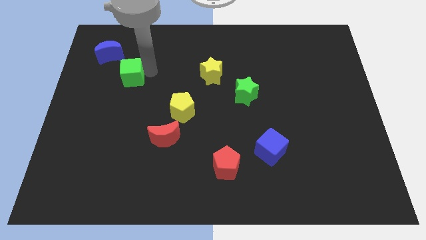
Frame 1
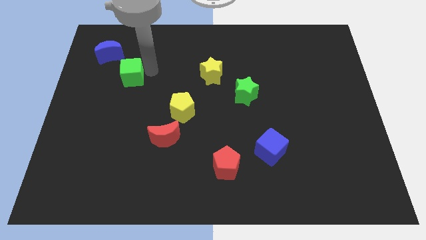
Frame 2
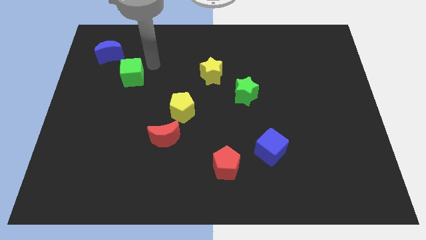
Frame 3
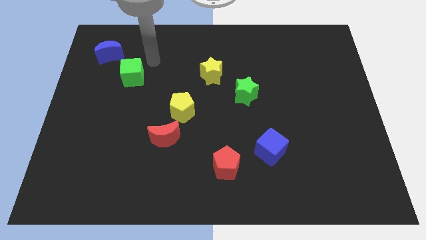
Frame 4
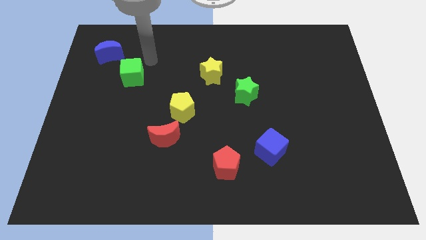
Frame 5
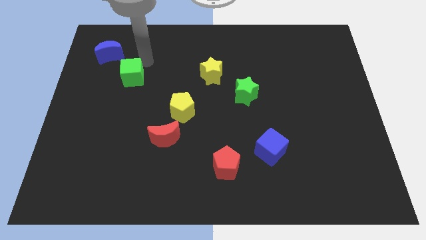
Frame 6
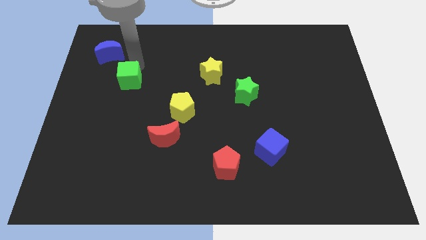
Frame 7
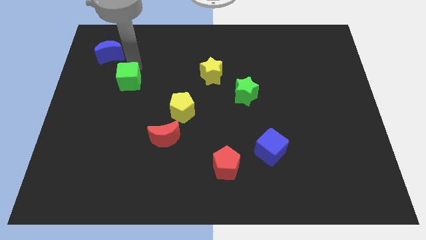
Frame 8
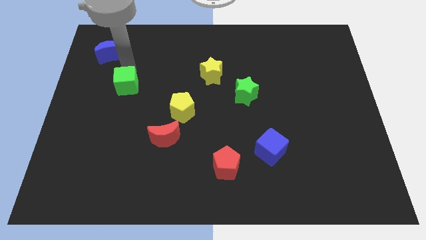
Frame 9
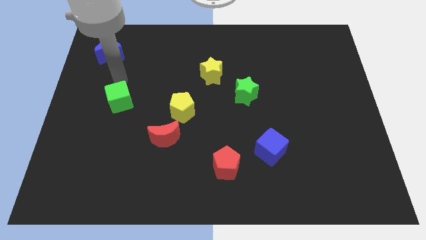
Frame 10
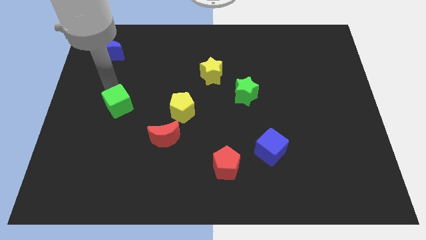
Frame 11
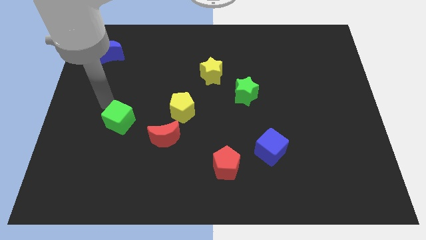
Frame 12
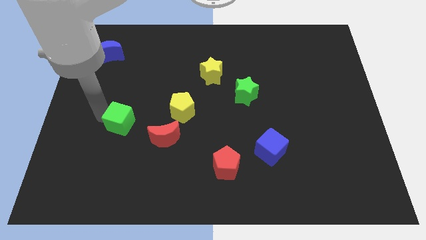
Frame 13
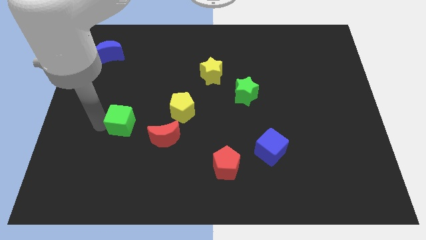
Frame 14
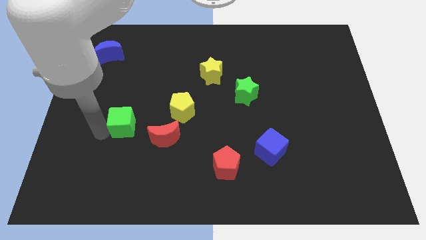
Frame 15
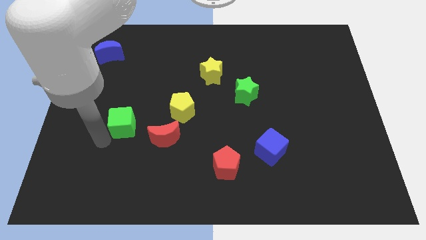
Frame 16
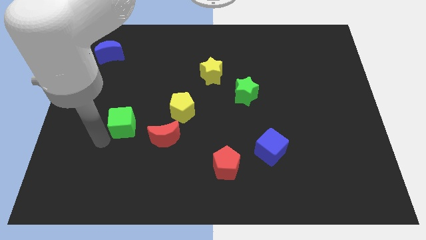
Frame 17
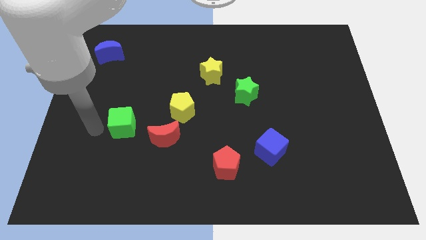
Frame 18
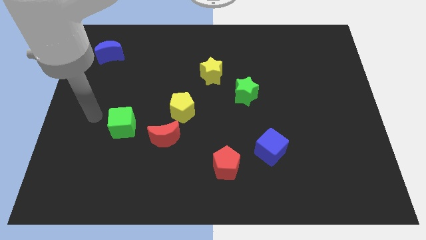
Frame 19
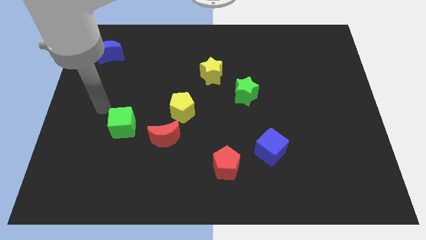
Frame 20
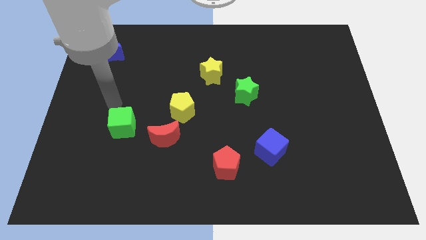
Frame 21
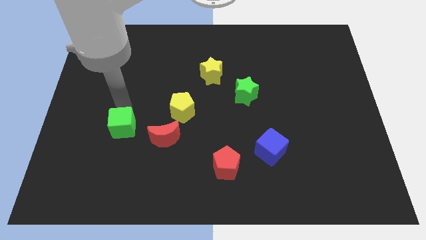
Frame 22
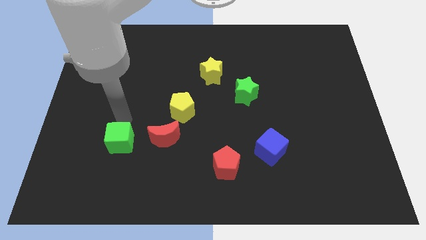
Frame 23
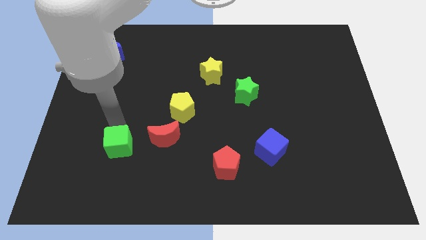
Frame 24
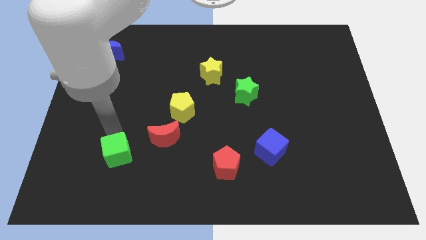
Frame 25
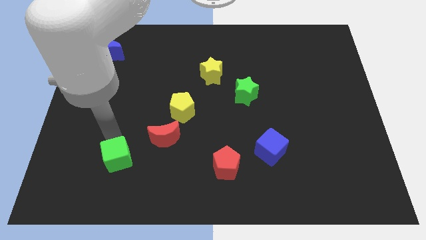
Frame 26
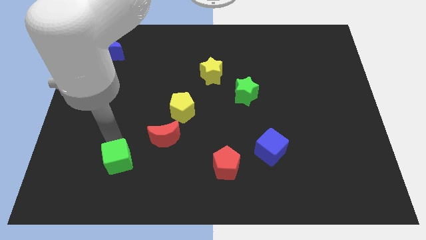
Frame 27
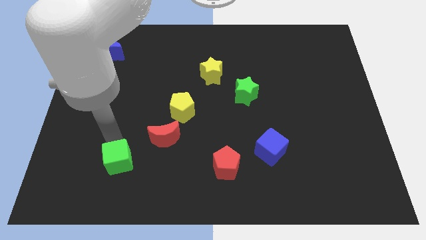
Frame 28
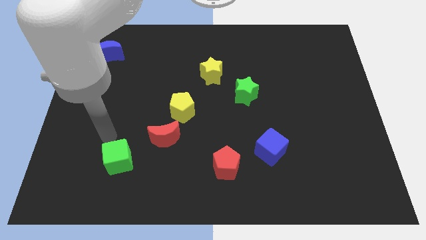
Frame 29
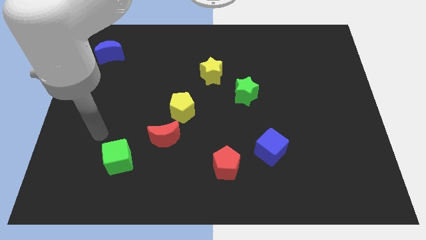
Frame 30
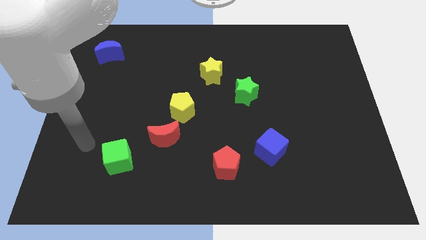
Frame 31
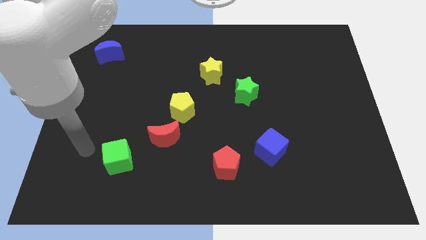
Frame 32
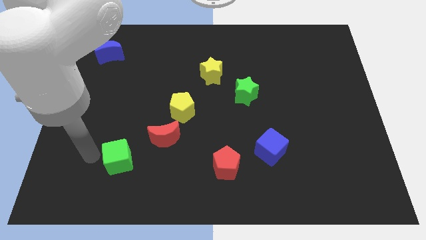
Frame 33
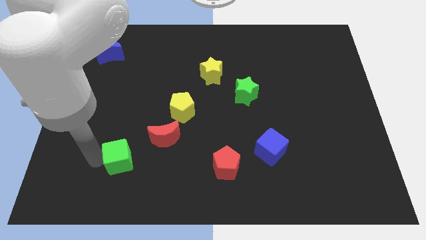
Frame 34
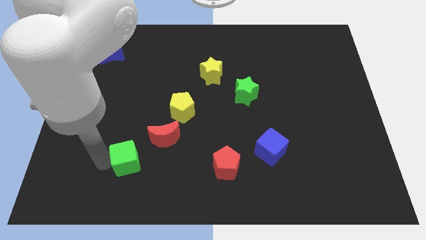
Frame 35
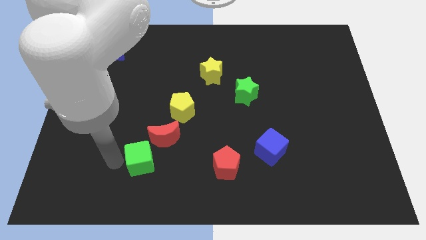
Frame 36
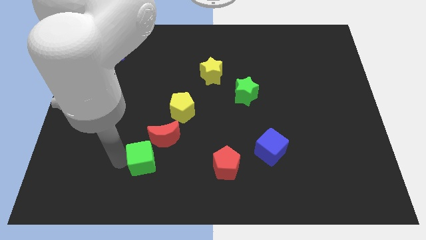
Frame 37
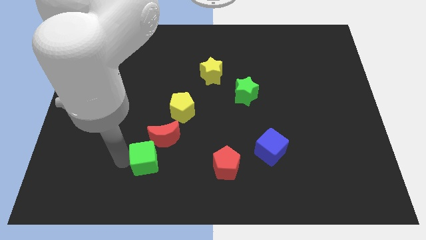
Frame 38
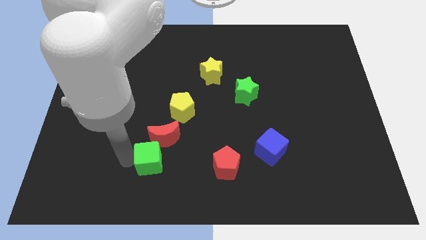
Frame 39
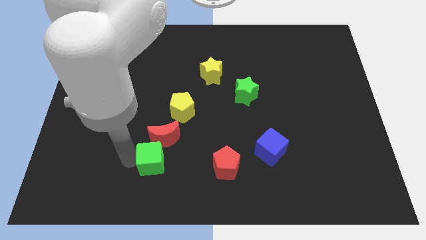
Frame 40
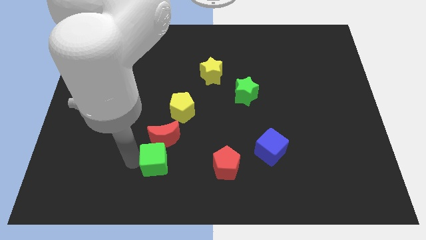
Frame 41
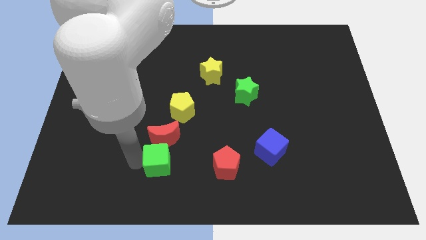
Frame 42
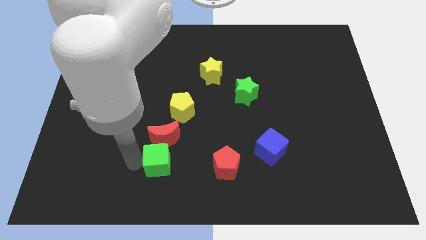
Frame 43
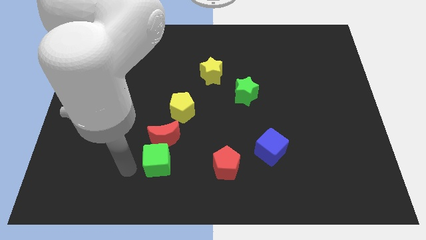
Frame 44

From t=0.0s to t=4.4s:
move the green cube to the bottom of the red crescent

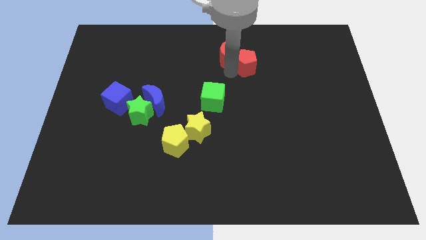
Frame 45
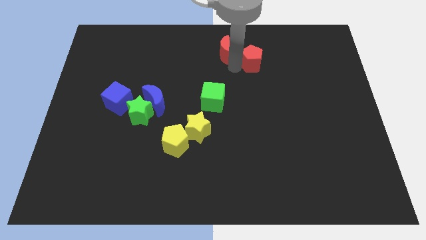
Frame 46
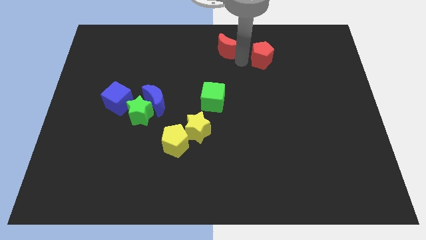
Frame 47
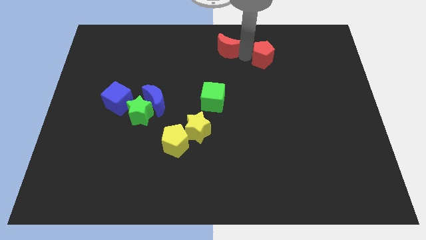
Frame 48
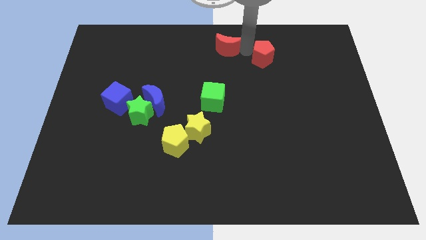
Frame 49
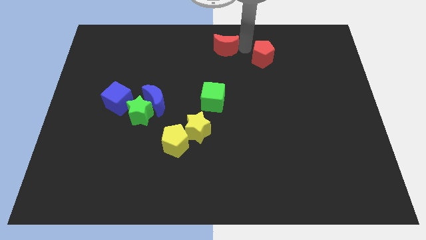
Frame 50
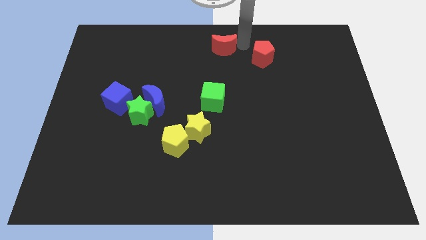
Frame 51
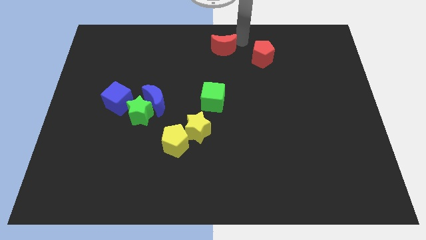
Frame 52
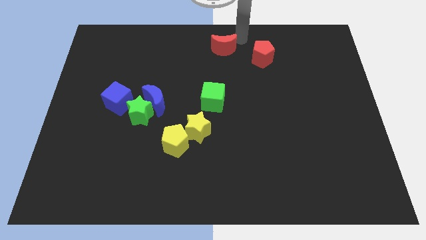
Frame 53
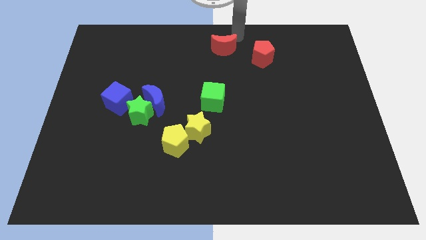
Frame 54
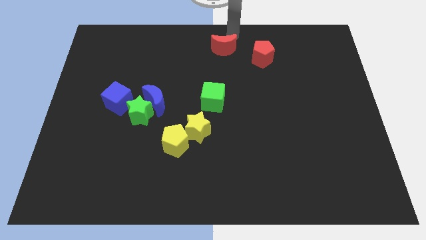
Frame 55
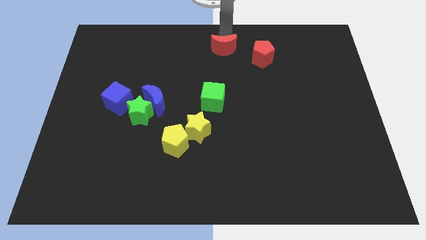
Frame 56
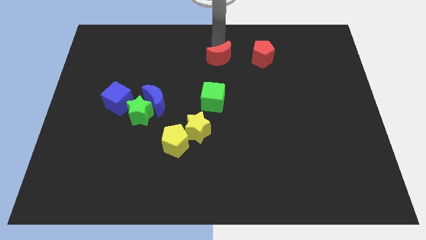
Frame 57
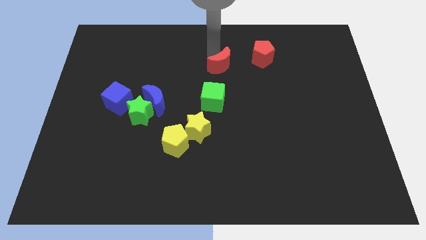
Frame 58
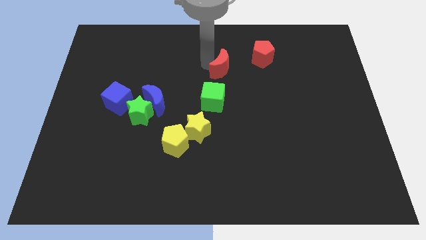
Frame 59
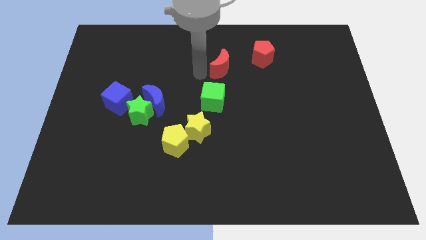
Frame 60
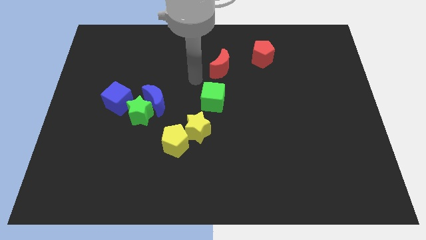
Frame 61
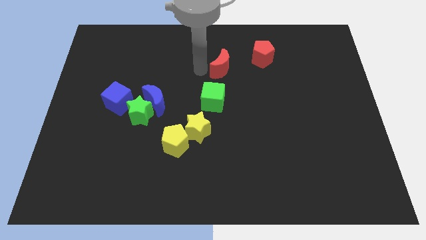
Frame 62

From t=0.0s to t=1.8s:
separate the red crescent and red pentagon blocks

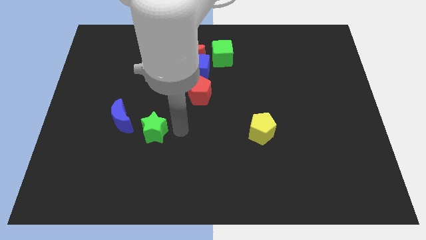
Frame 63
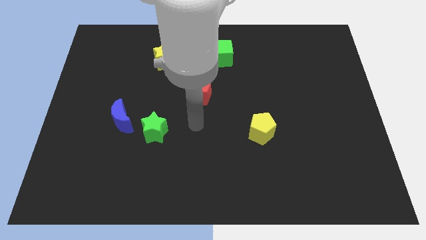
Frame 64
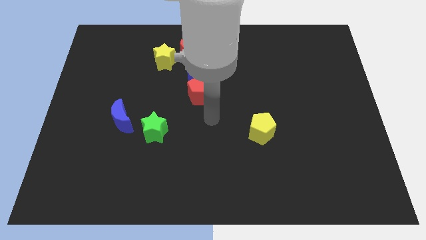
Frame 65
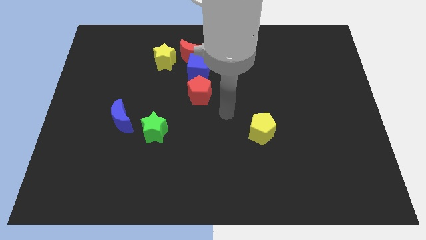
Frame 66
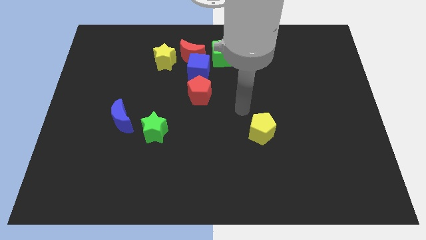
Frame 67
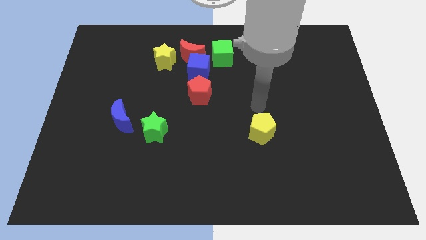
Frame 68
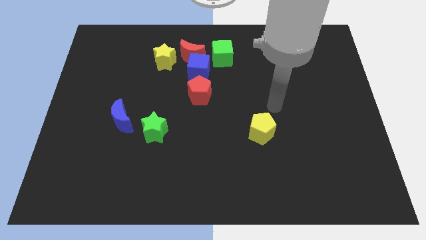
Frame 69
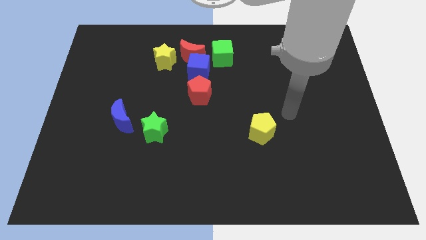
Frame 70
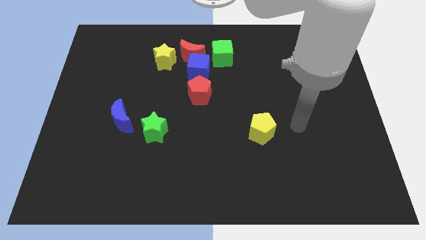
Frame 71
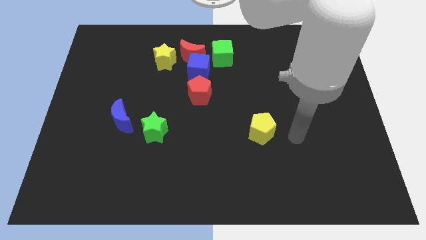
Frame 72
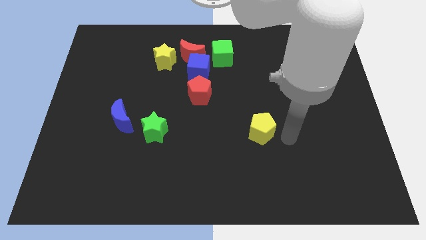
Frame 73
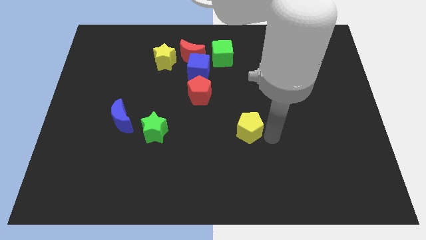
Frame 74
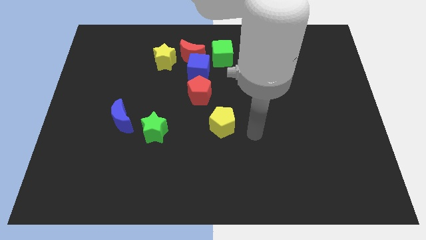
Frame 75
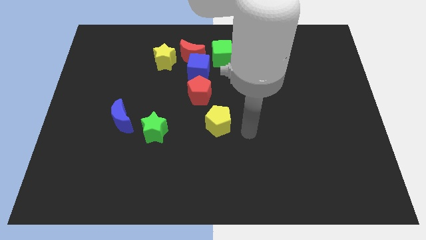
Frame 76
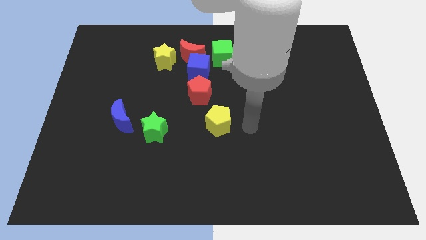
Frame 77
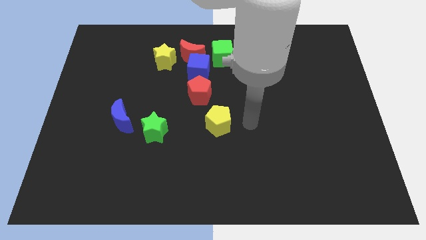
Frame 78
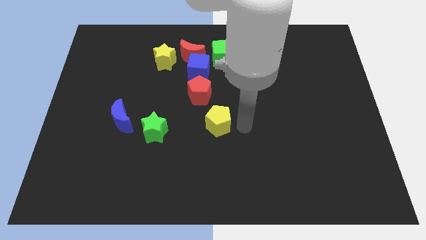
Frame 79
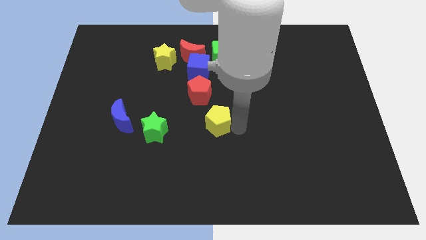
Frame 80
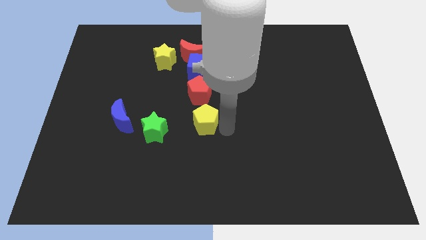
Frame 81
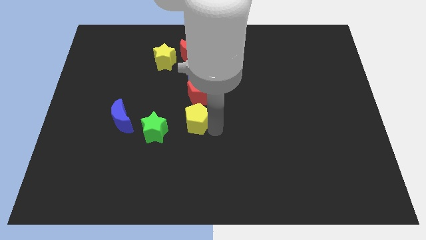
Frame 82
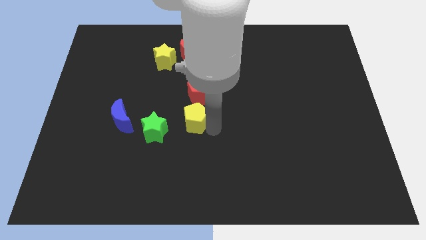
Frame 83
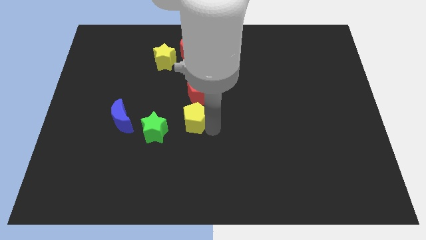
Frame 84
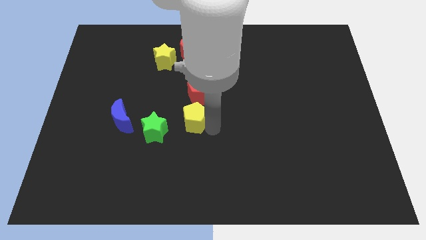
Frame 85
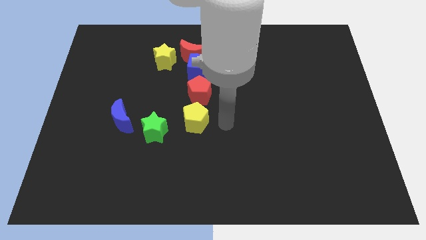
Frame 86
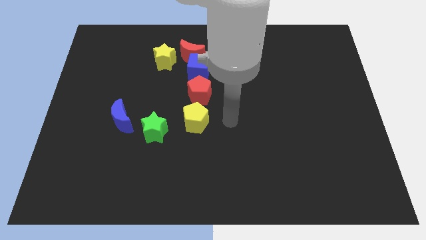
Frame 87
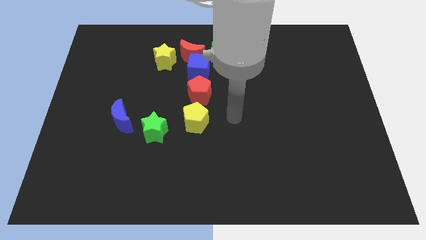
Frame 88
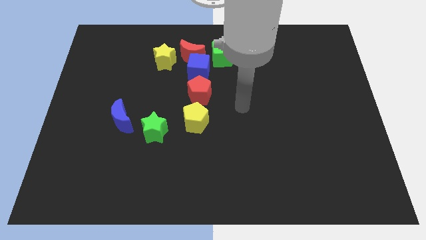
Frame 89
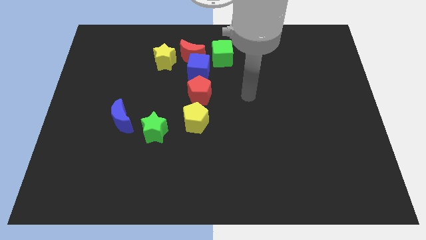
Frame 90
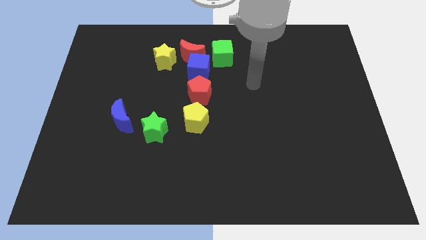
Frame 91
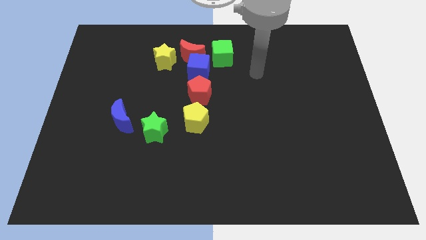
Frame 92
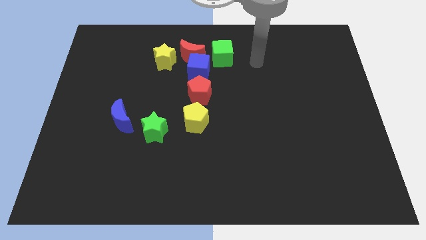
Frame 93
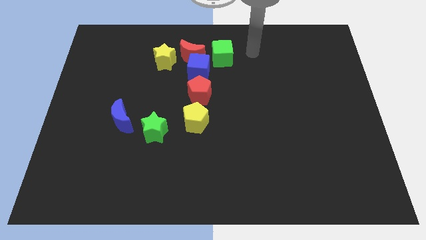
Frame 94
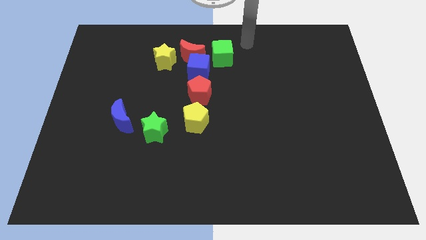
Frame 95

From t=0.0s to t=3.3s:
put the yellow pentagon to the bottom side of the red pentagon
